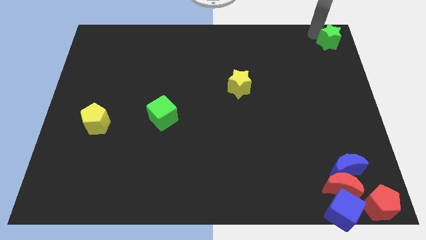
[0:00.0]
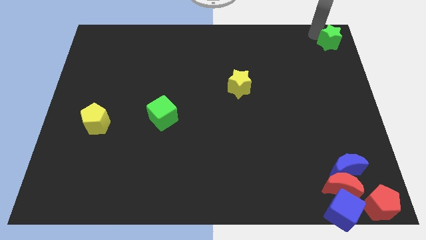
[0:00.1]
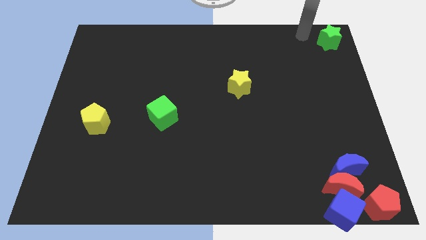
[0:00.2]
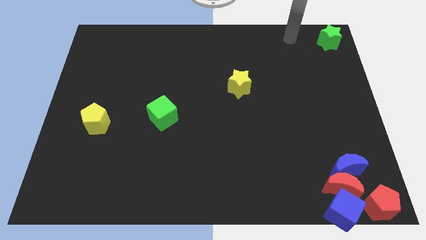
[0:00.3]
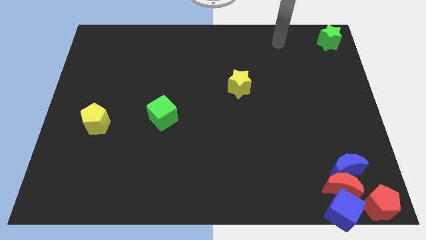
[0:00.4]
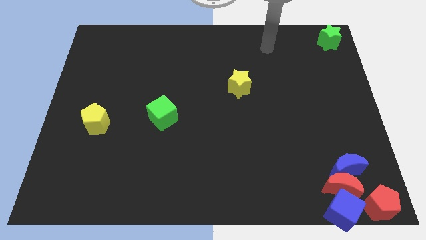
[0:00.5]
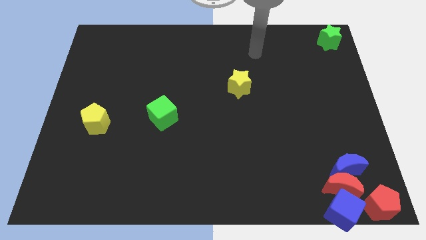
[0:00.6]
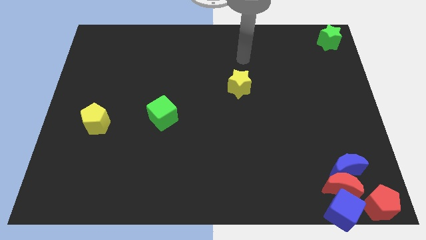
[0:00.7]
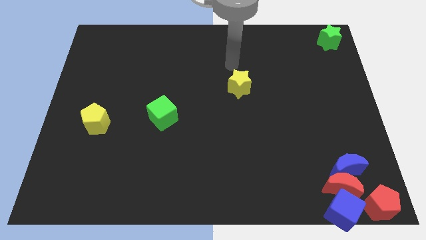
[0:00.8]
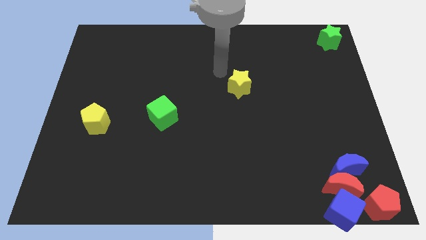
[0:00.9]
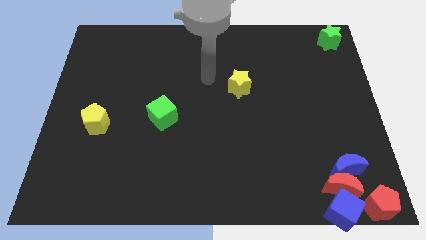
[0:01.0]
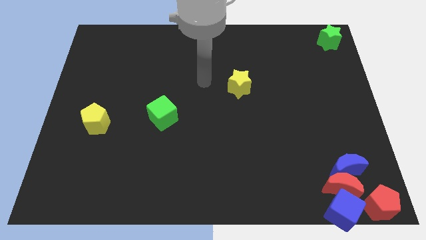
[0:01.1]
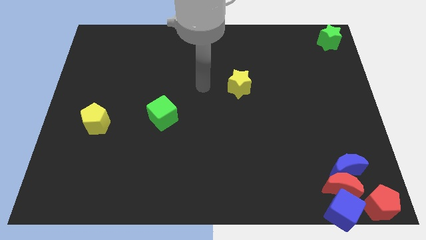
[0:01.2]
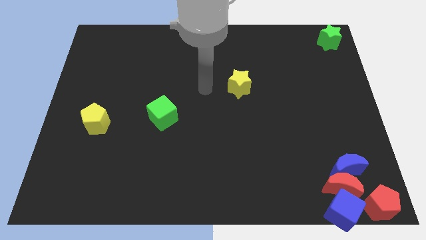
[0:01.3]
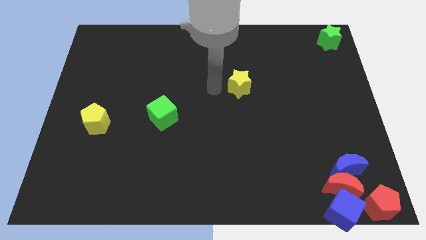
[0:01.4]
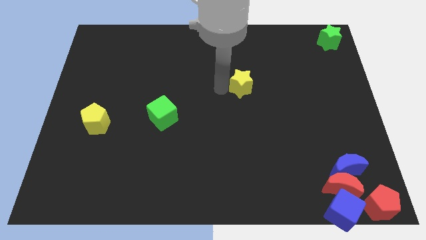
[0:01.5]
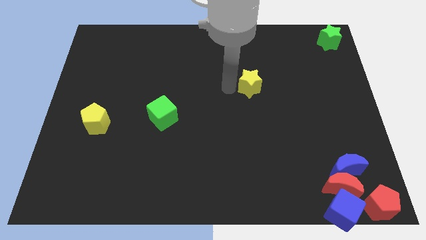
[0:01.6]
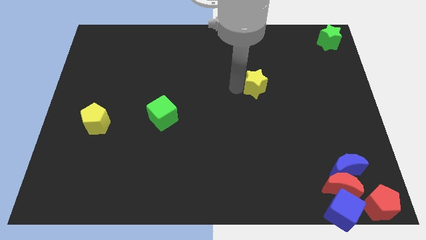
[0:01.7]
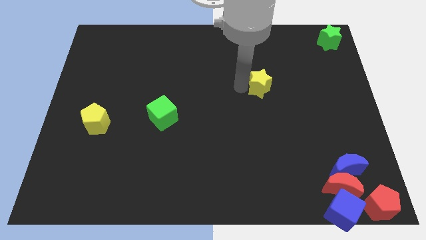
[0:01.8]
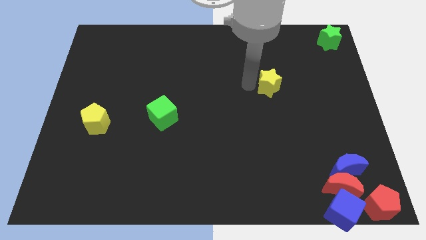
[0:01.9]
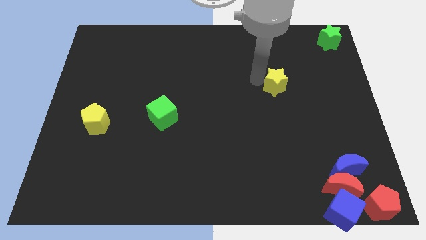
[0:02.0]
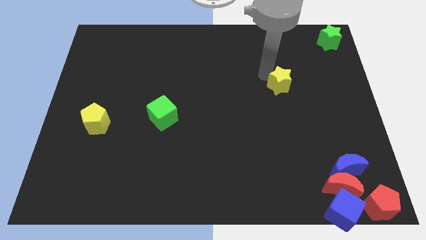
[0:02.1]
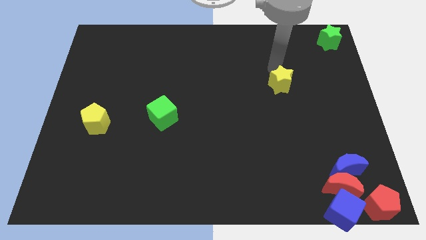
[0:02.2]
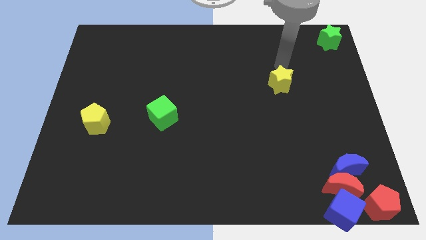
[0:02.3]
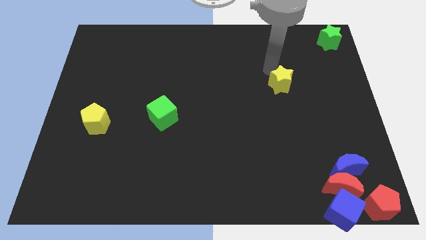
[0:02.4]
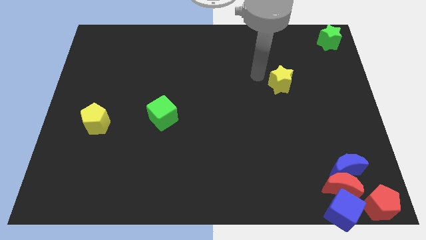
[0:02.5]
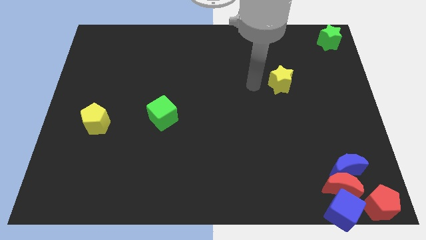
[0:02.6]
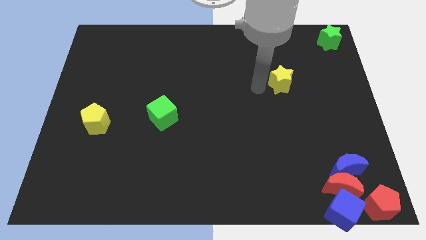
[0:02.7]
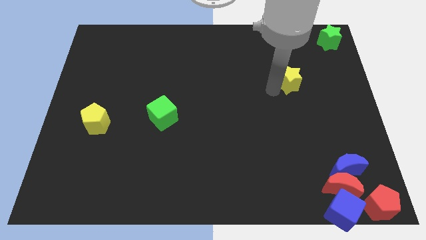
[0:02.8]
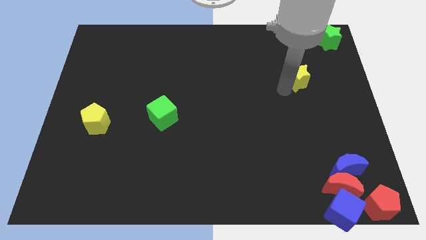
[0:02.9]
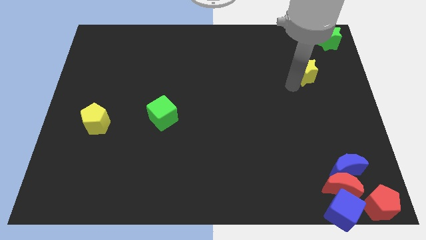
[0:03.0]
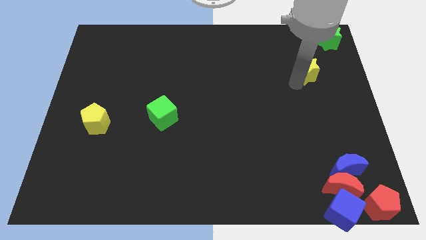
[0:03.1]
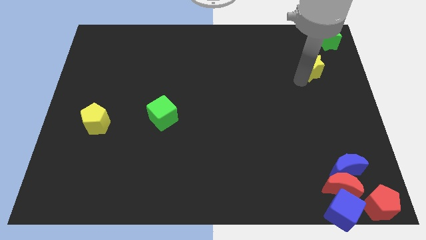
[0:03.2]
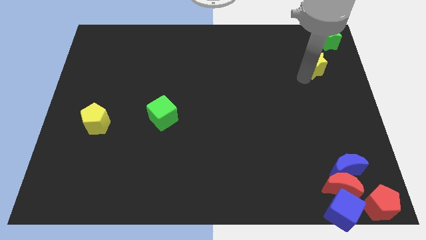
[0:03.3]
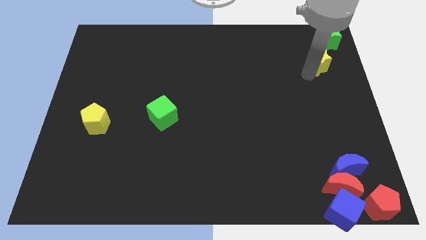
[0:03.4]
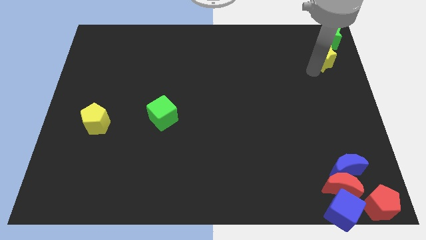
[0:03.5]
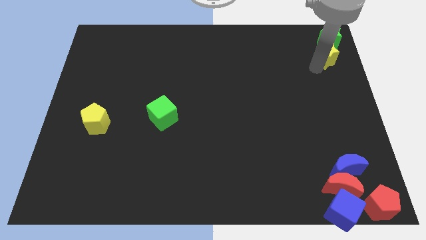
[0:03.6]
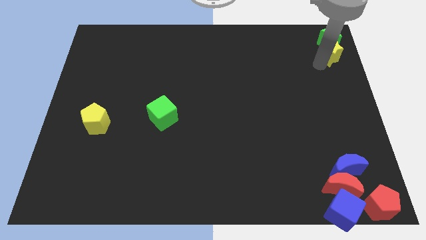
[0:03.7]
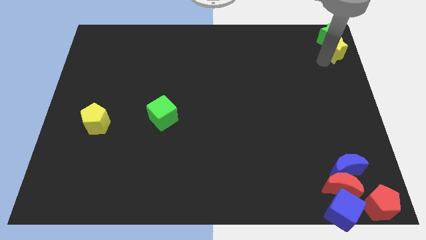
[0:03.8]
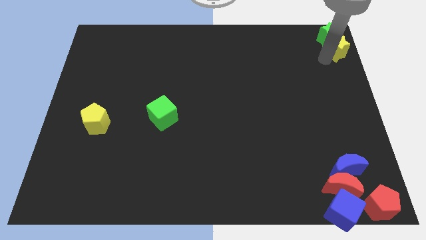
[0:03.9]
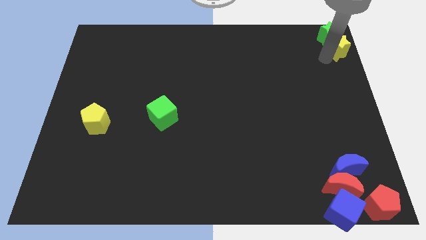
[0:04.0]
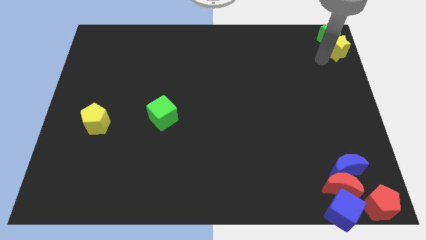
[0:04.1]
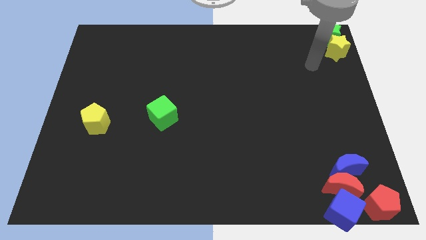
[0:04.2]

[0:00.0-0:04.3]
move the yellow star into the bottom side of the green star

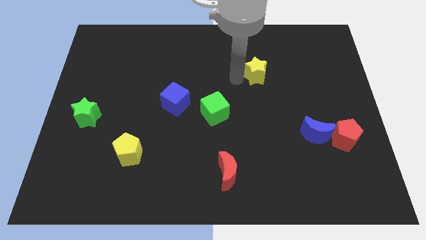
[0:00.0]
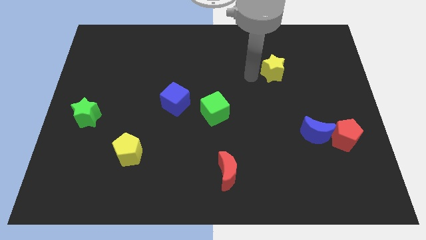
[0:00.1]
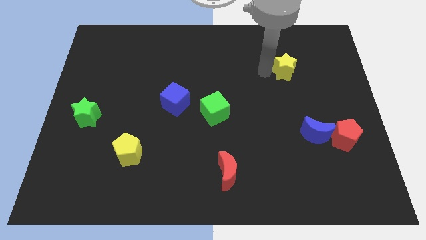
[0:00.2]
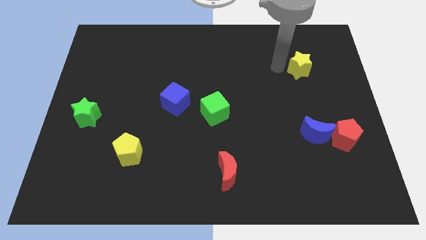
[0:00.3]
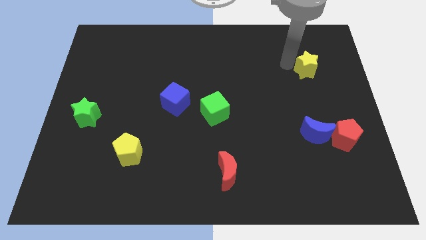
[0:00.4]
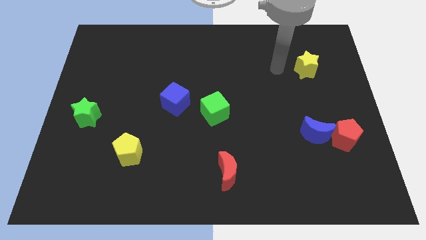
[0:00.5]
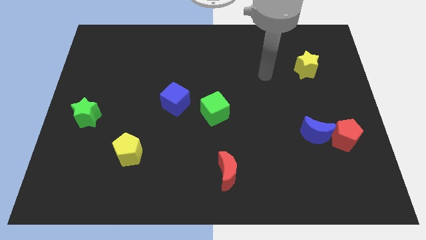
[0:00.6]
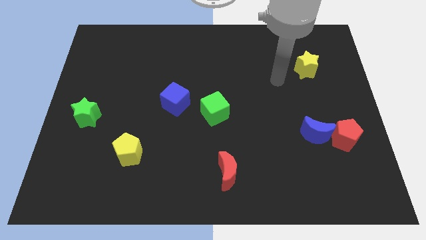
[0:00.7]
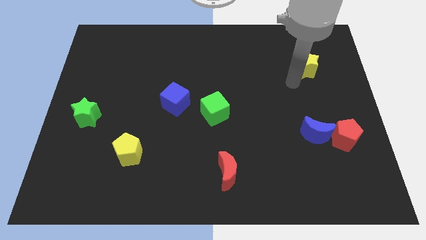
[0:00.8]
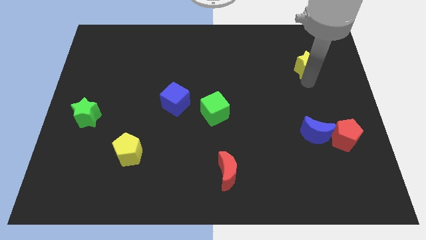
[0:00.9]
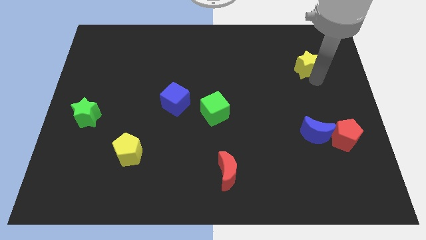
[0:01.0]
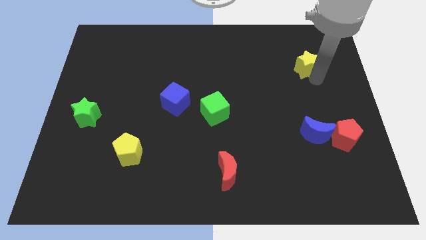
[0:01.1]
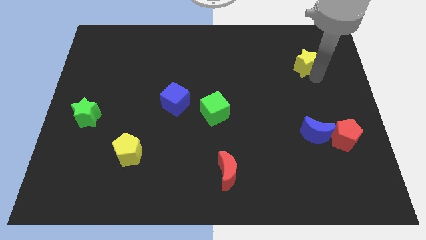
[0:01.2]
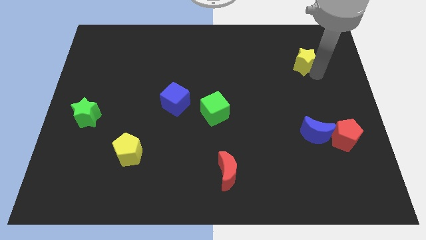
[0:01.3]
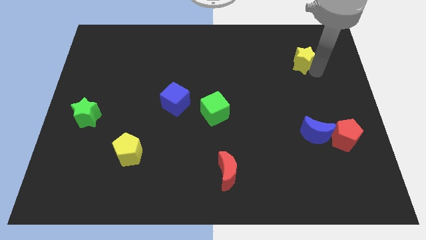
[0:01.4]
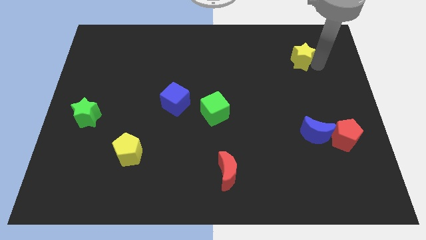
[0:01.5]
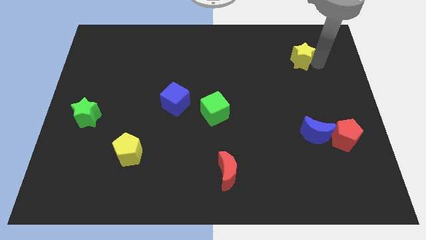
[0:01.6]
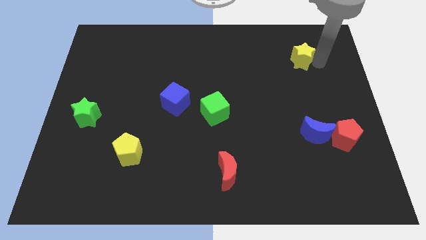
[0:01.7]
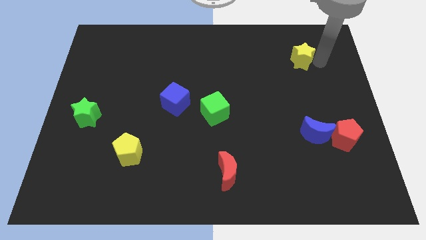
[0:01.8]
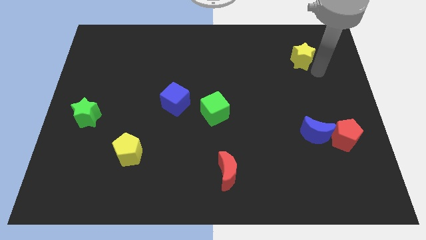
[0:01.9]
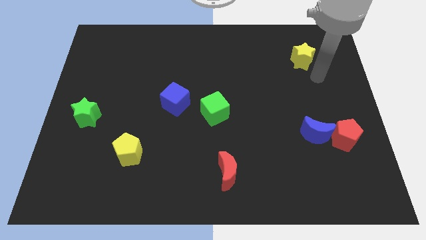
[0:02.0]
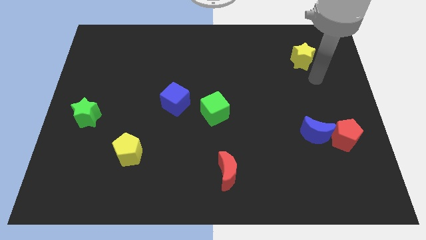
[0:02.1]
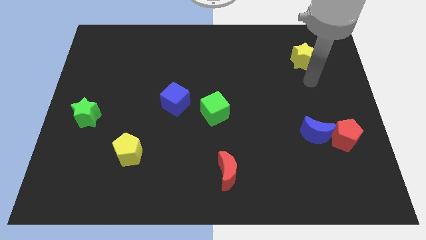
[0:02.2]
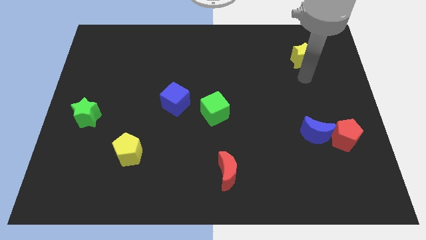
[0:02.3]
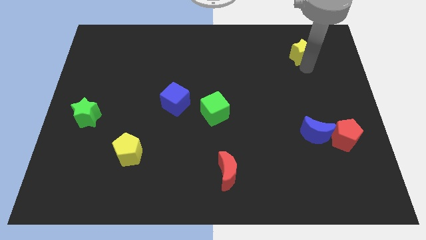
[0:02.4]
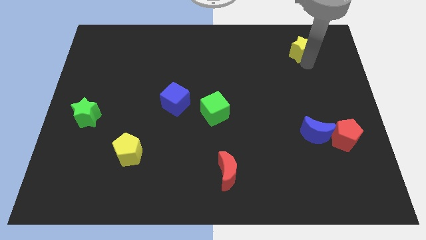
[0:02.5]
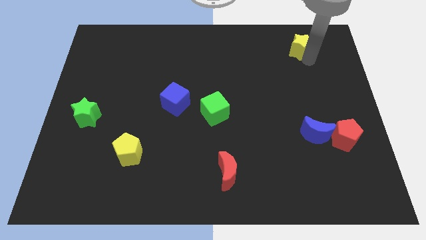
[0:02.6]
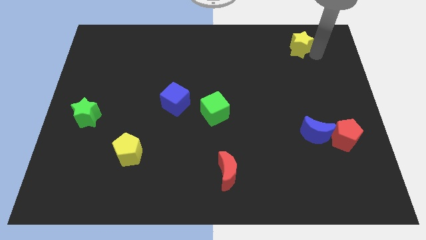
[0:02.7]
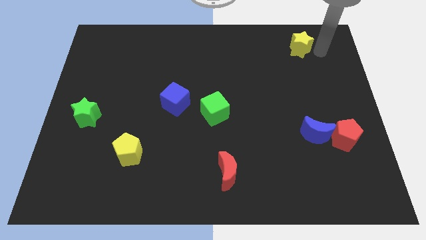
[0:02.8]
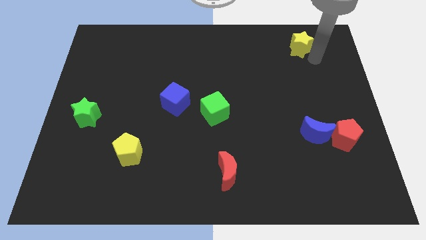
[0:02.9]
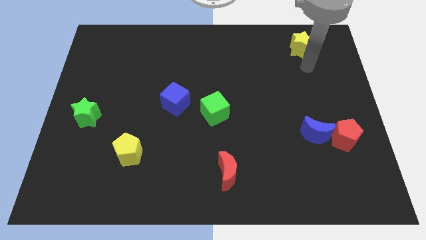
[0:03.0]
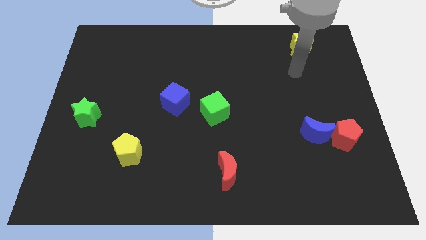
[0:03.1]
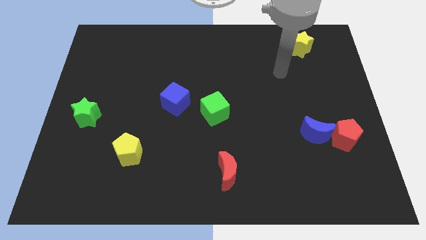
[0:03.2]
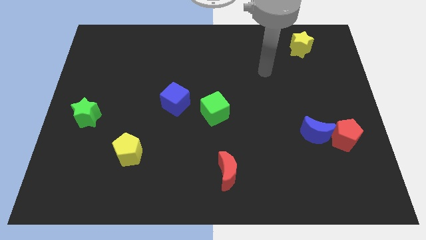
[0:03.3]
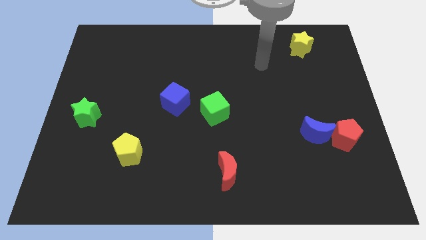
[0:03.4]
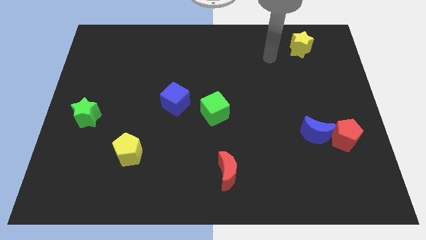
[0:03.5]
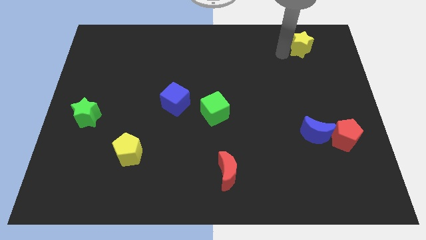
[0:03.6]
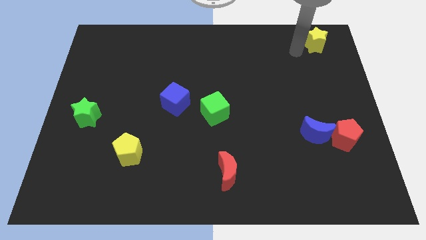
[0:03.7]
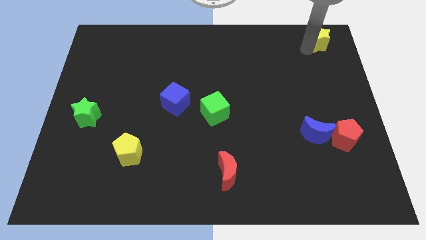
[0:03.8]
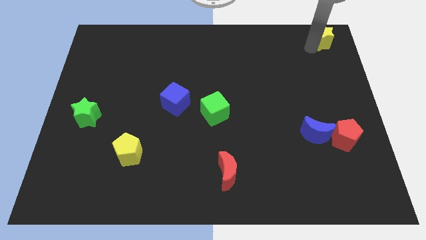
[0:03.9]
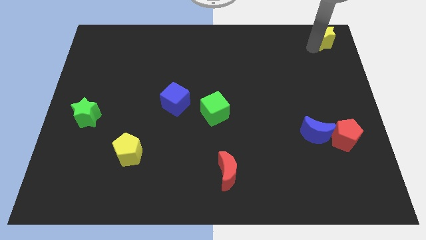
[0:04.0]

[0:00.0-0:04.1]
move yellow star to the top right

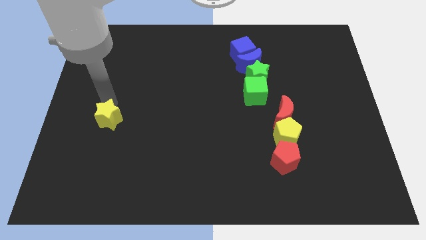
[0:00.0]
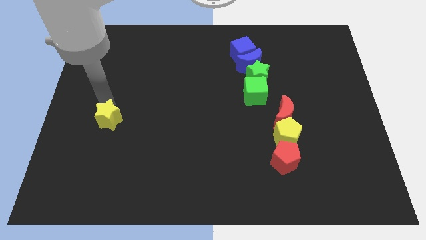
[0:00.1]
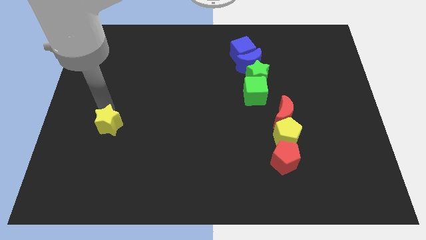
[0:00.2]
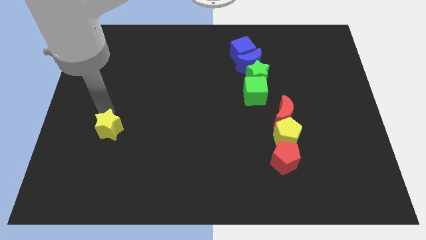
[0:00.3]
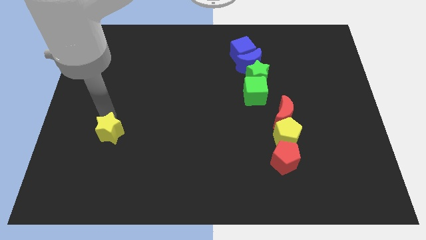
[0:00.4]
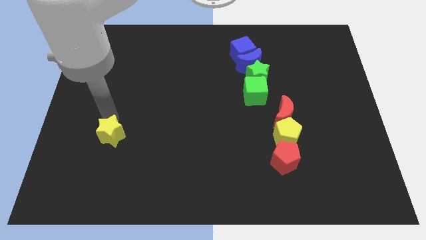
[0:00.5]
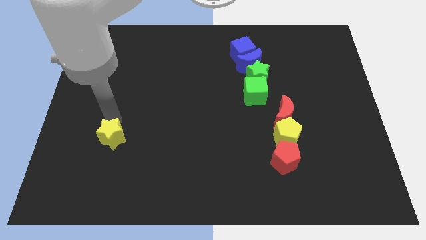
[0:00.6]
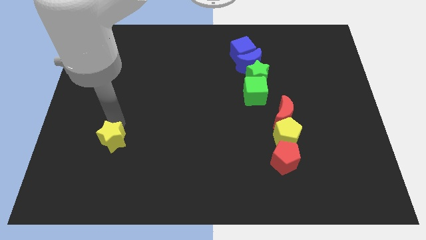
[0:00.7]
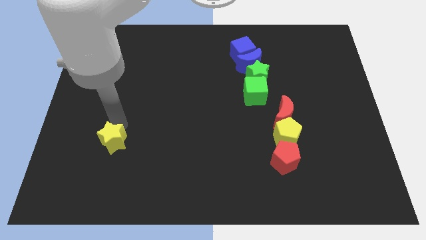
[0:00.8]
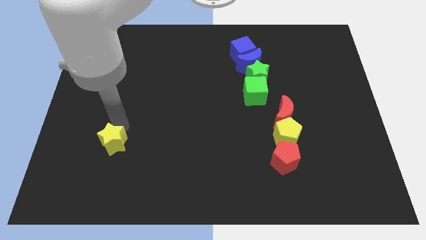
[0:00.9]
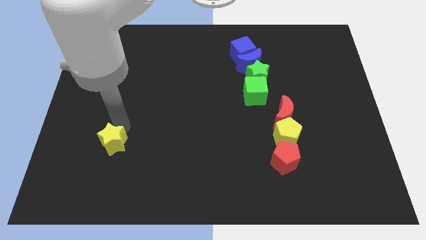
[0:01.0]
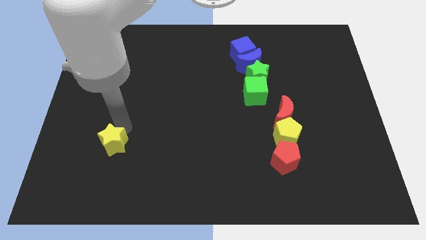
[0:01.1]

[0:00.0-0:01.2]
slightly move the yellow star towards the bottom
